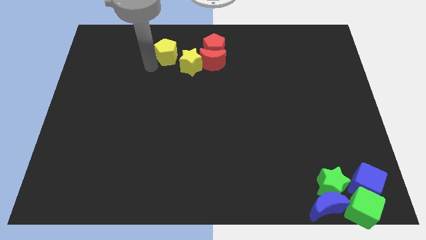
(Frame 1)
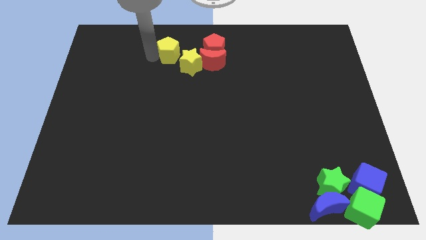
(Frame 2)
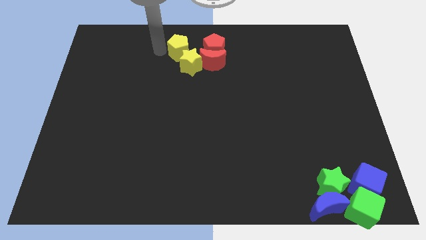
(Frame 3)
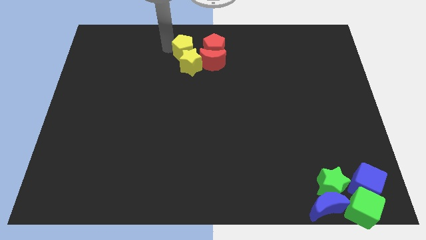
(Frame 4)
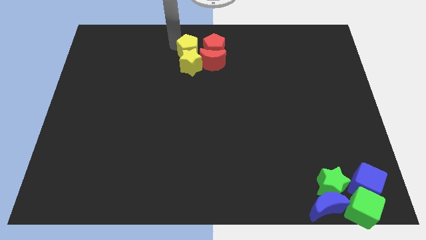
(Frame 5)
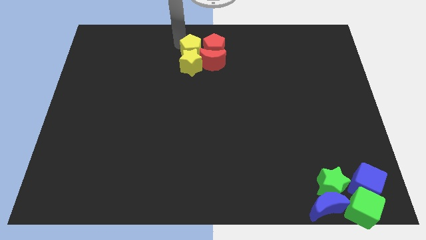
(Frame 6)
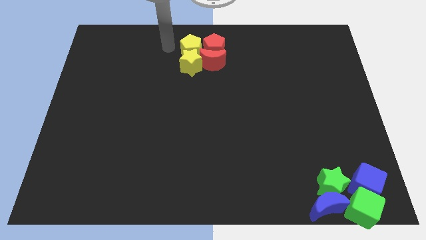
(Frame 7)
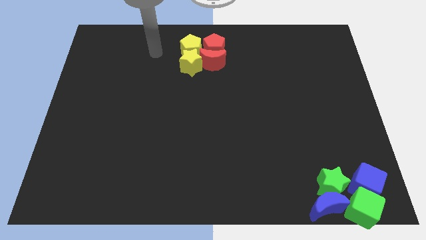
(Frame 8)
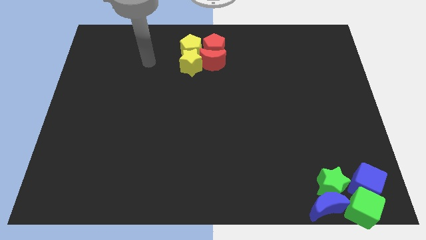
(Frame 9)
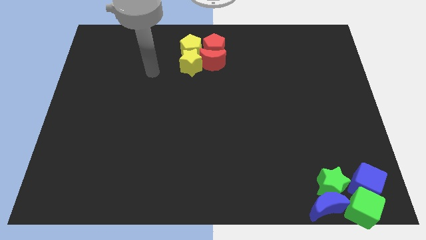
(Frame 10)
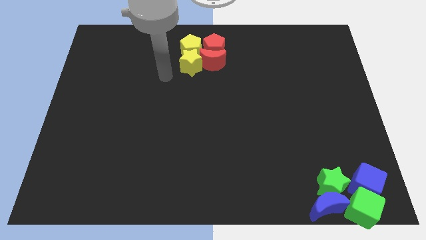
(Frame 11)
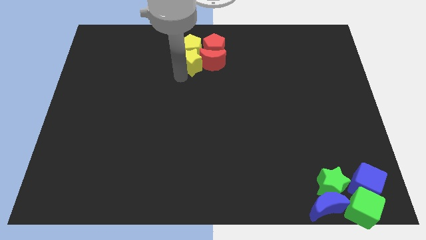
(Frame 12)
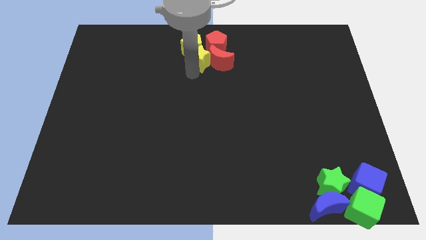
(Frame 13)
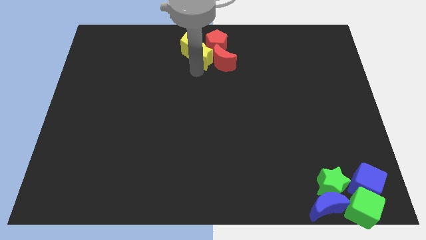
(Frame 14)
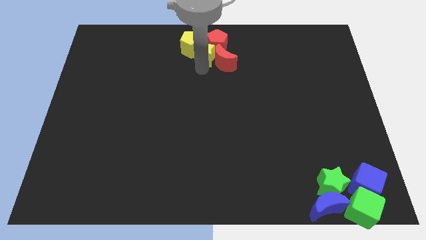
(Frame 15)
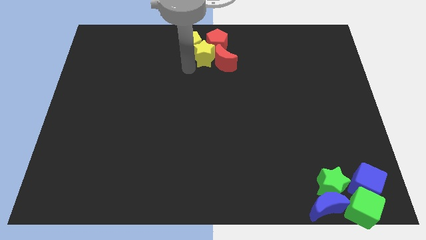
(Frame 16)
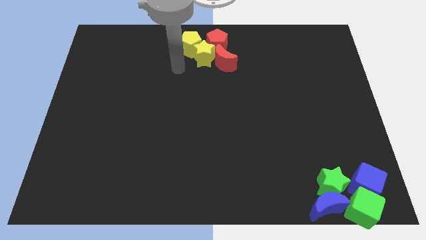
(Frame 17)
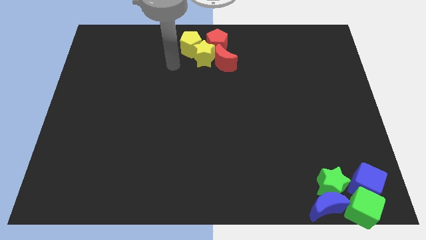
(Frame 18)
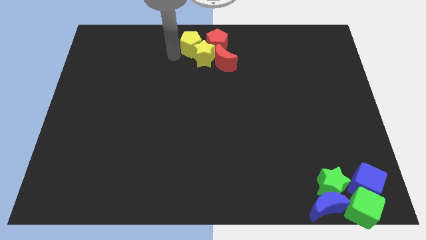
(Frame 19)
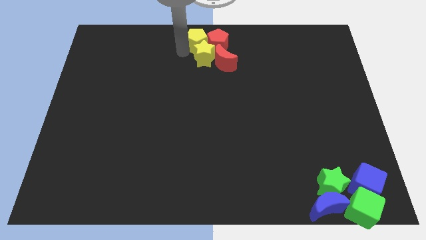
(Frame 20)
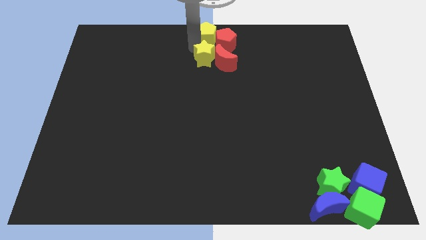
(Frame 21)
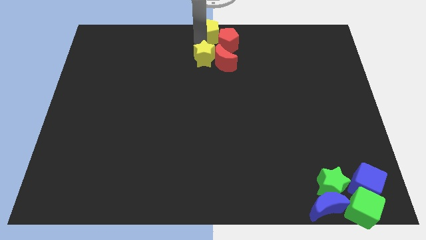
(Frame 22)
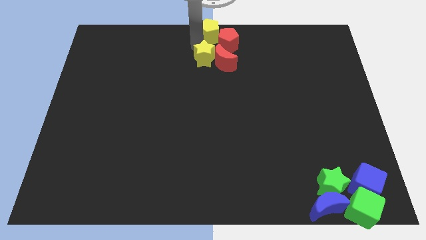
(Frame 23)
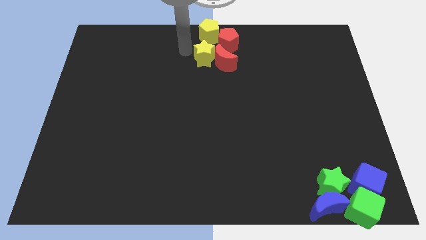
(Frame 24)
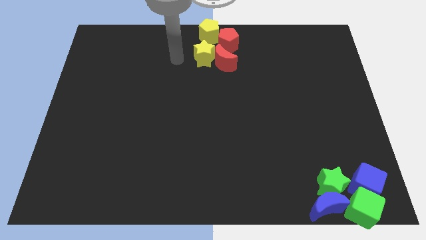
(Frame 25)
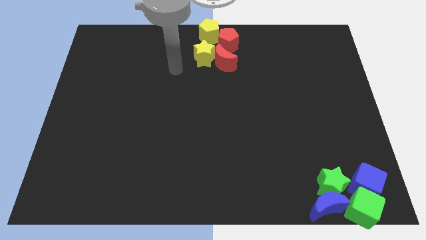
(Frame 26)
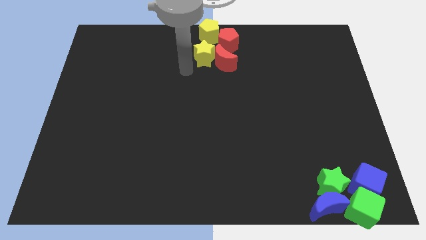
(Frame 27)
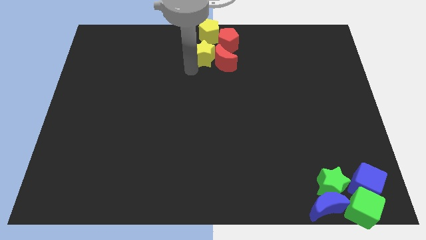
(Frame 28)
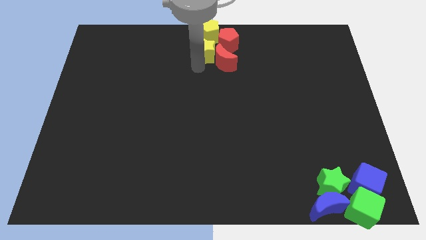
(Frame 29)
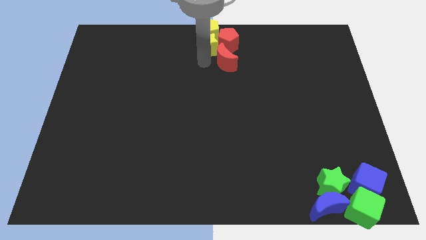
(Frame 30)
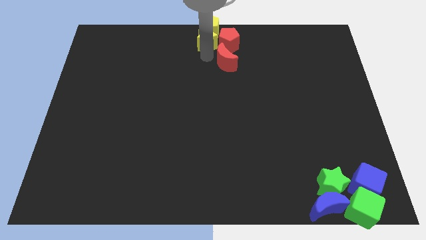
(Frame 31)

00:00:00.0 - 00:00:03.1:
move the yellow star and the yellow pentagon towards up

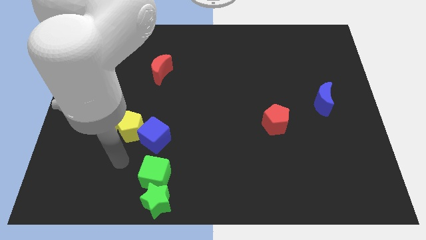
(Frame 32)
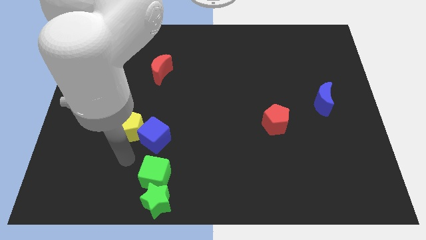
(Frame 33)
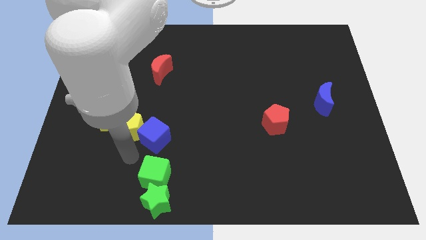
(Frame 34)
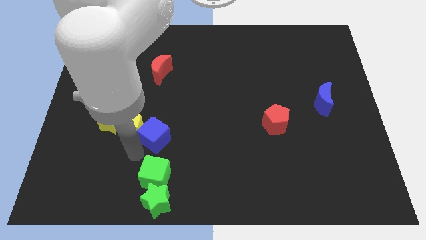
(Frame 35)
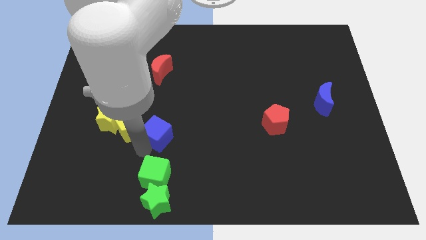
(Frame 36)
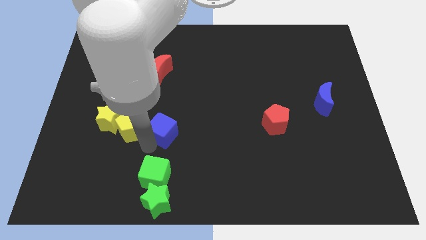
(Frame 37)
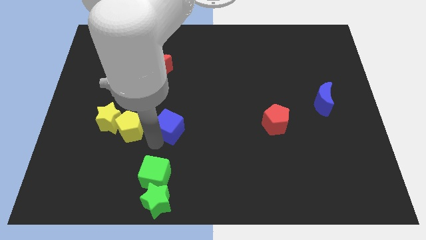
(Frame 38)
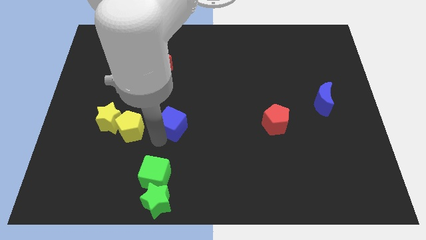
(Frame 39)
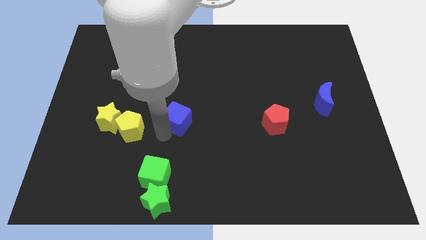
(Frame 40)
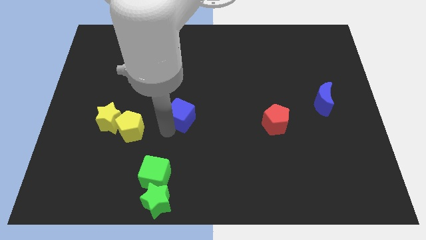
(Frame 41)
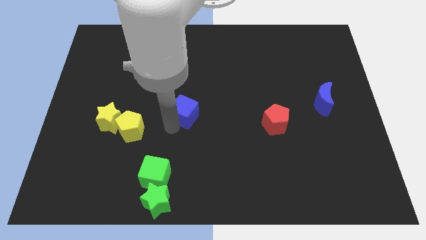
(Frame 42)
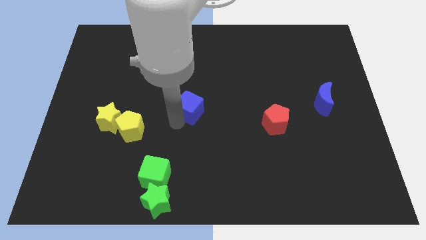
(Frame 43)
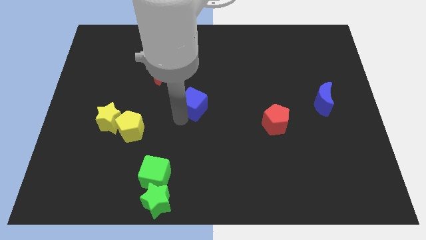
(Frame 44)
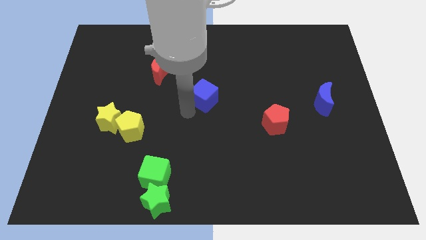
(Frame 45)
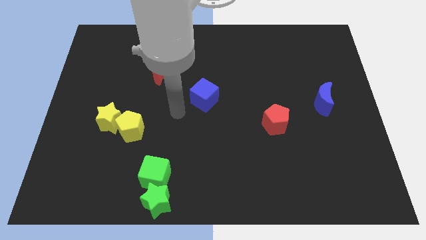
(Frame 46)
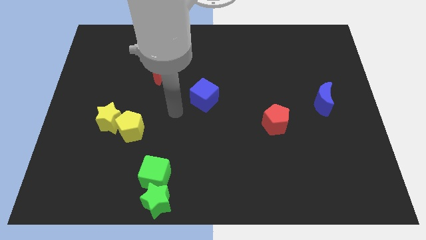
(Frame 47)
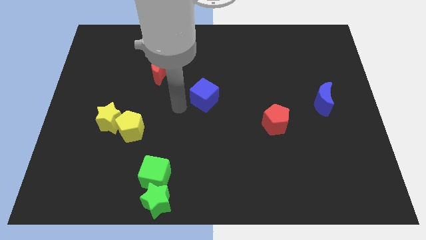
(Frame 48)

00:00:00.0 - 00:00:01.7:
place the blue cube in between red crescent and red pentagon

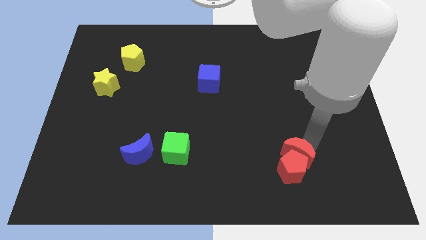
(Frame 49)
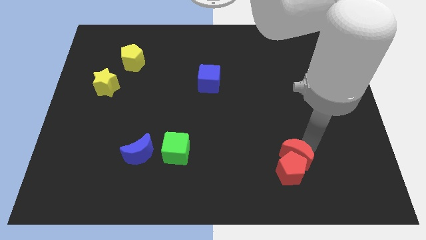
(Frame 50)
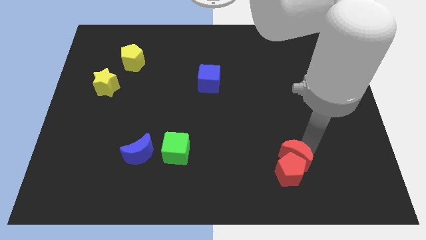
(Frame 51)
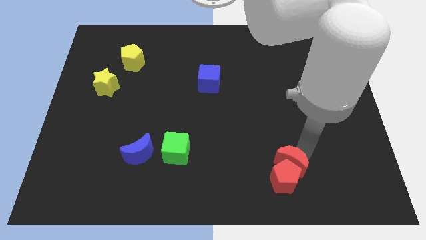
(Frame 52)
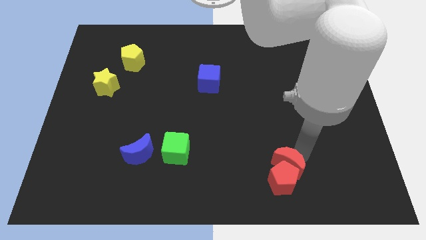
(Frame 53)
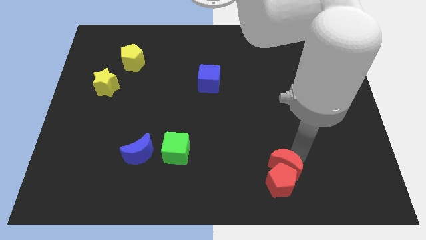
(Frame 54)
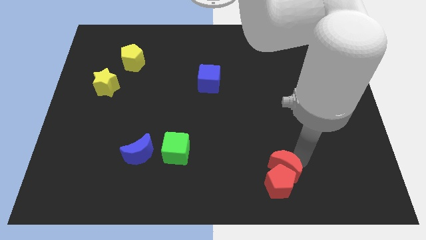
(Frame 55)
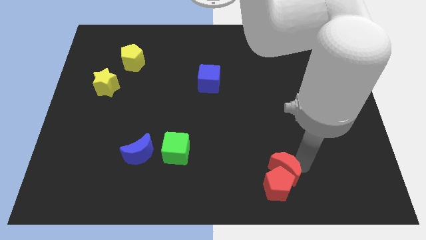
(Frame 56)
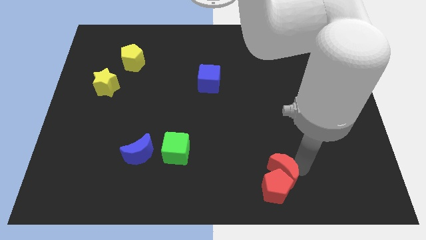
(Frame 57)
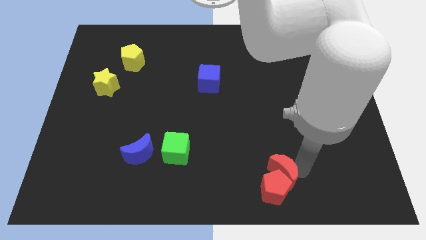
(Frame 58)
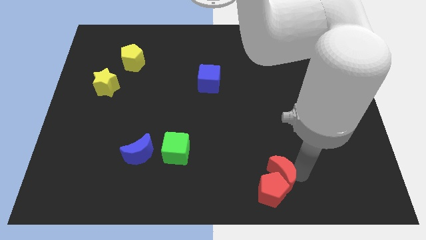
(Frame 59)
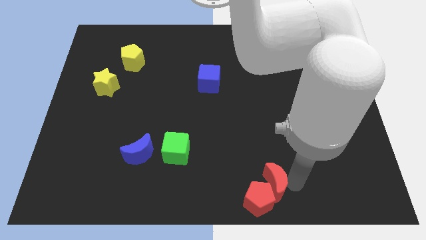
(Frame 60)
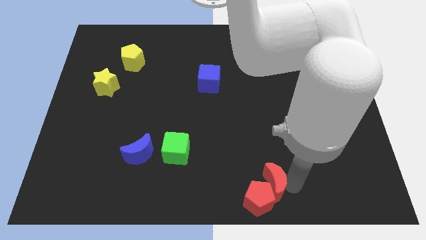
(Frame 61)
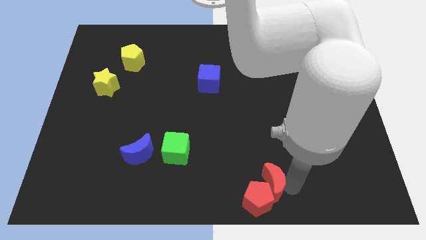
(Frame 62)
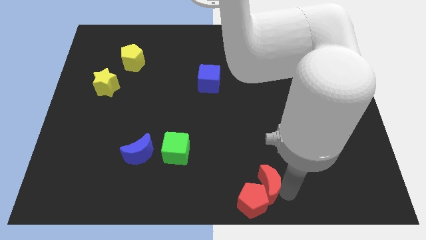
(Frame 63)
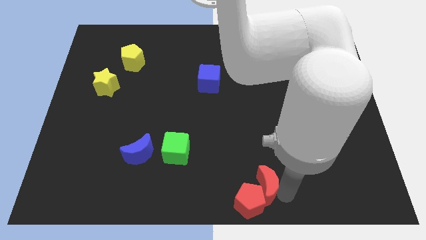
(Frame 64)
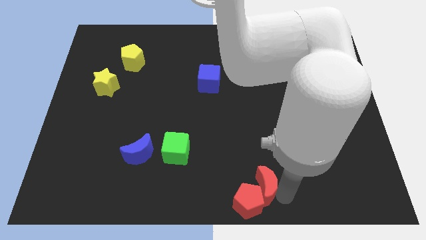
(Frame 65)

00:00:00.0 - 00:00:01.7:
move the red blocks towards the bottom center

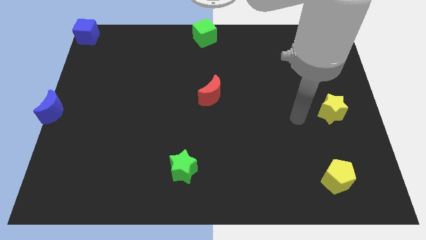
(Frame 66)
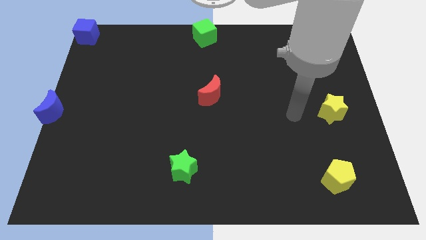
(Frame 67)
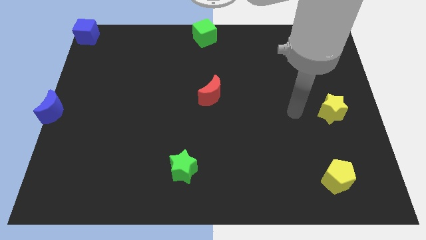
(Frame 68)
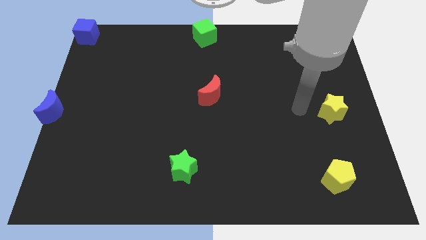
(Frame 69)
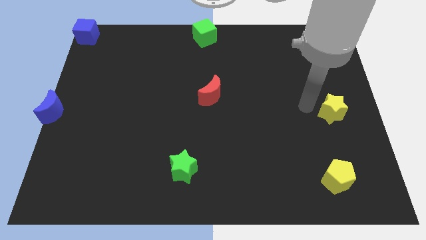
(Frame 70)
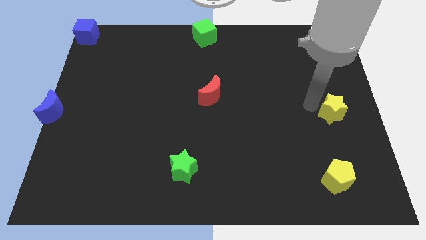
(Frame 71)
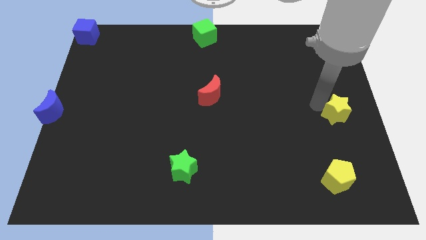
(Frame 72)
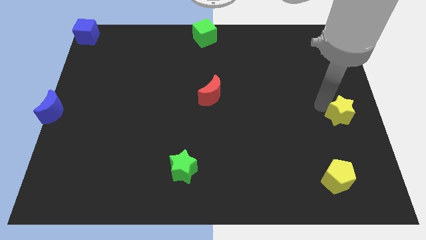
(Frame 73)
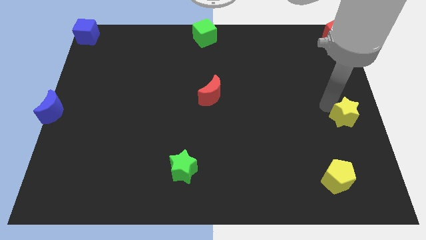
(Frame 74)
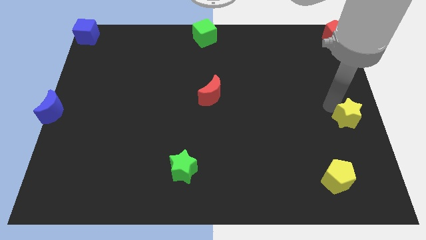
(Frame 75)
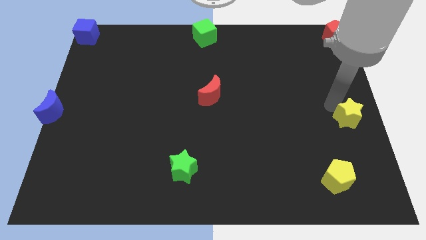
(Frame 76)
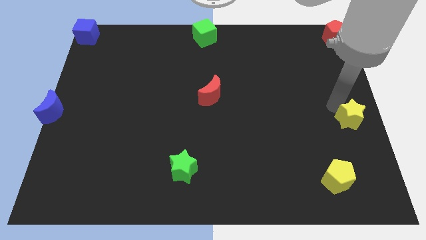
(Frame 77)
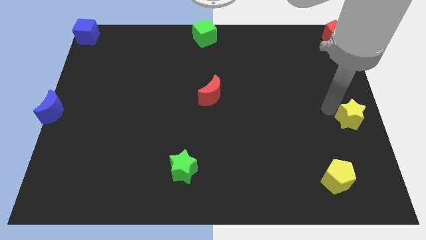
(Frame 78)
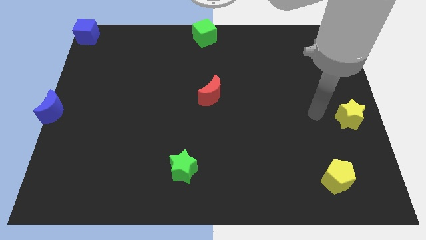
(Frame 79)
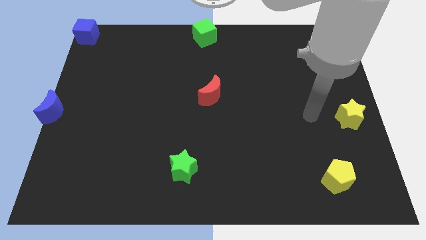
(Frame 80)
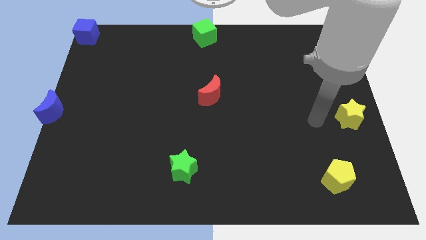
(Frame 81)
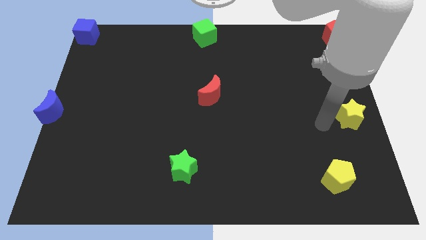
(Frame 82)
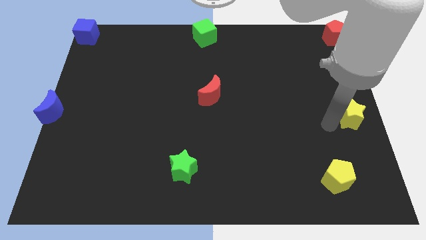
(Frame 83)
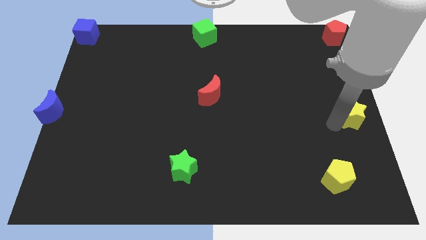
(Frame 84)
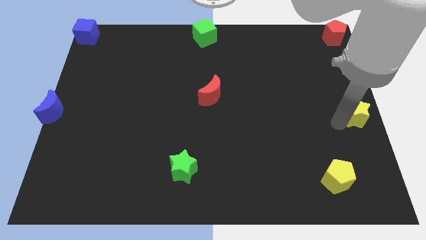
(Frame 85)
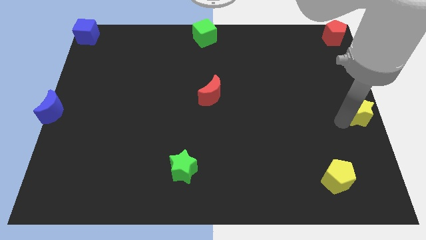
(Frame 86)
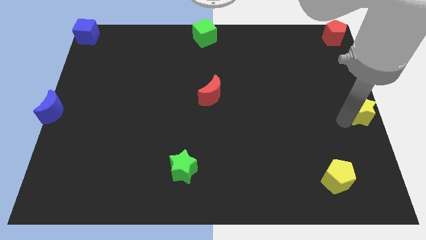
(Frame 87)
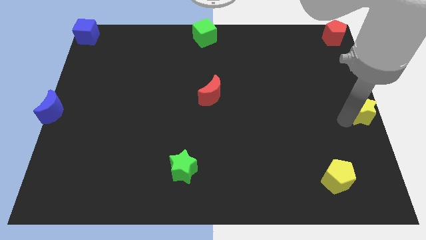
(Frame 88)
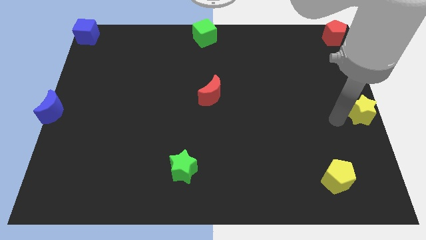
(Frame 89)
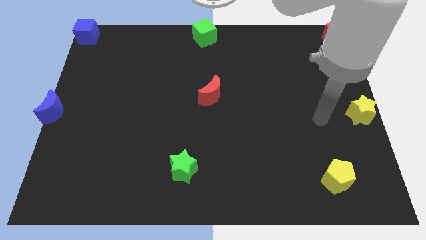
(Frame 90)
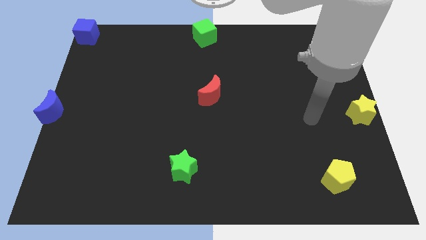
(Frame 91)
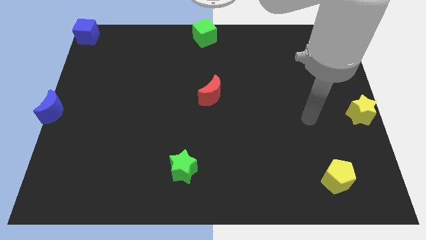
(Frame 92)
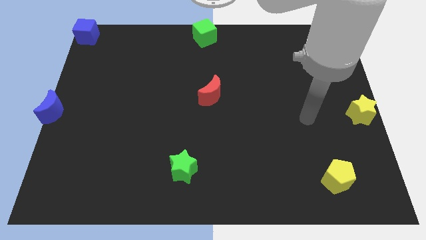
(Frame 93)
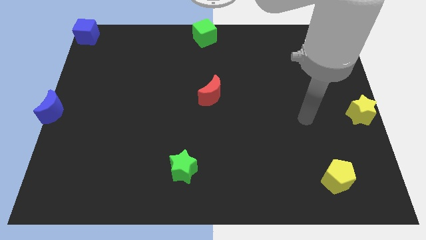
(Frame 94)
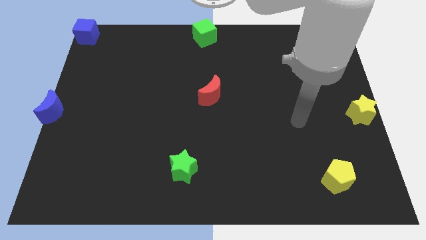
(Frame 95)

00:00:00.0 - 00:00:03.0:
move the yellow star to the center right of the board
